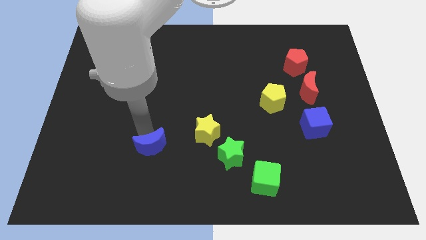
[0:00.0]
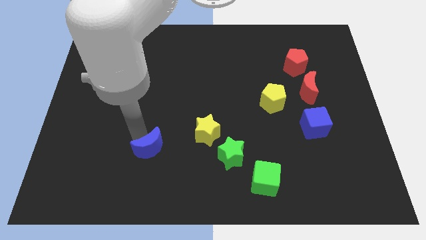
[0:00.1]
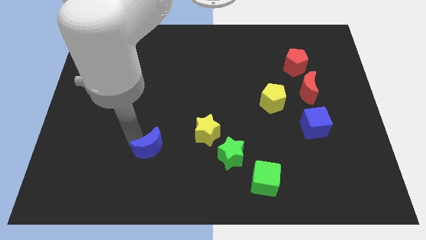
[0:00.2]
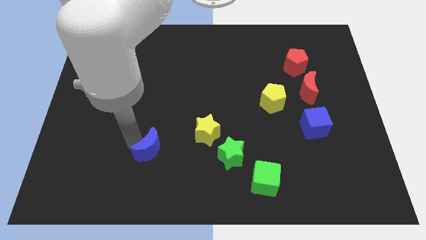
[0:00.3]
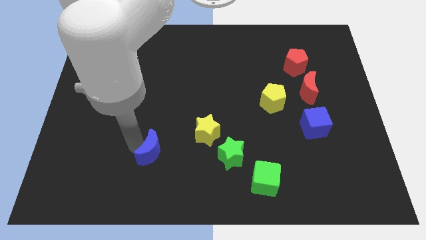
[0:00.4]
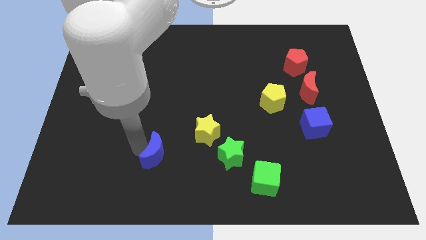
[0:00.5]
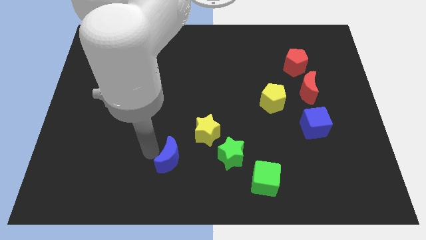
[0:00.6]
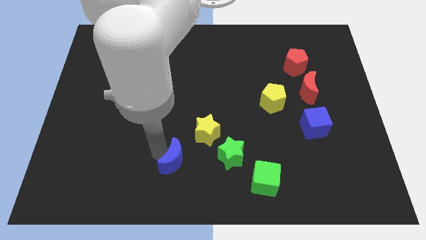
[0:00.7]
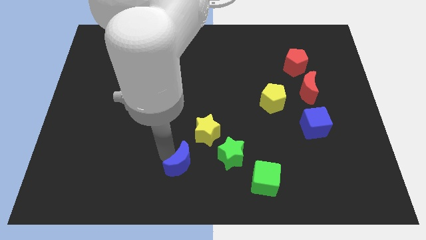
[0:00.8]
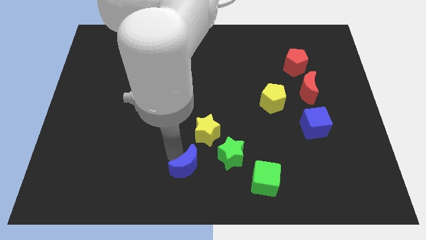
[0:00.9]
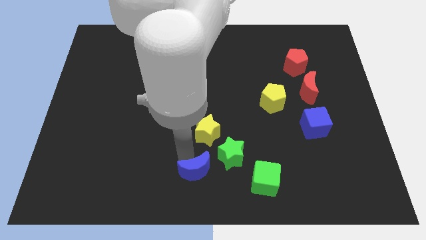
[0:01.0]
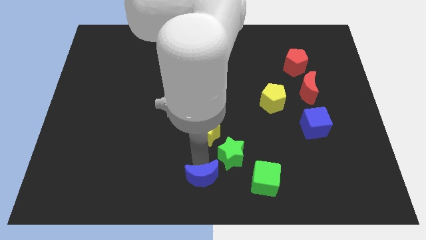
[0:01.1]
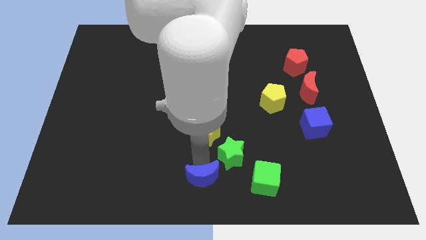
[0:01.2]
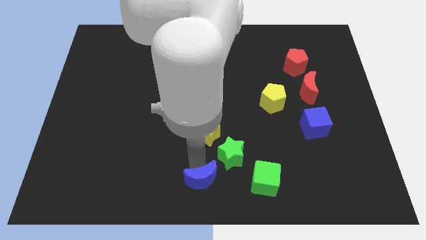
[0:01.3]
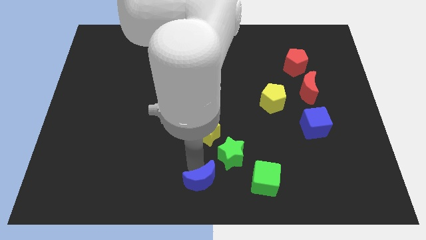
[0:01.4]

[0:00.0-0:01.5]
slide the blue moon below the yellow star

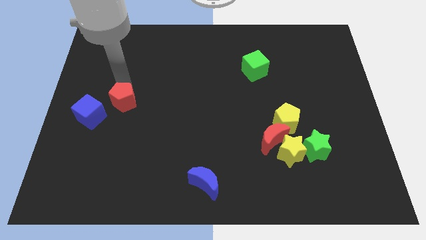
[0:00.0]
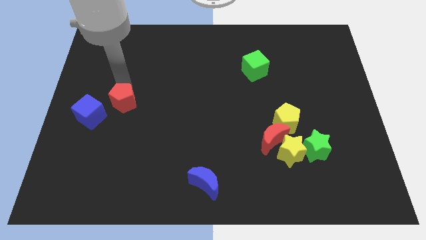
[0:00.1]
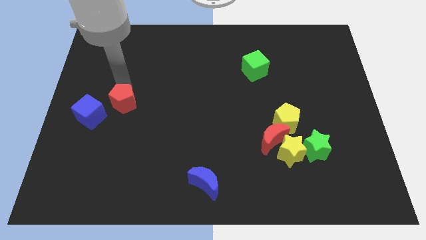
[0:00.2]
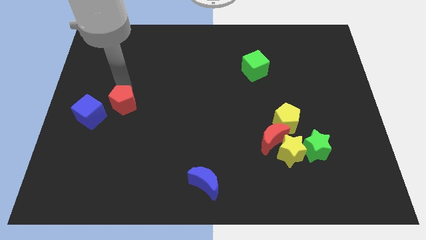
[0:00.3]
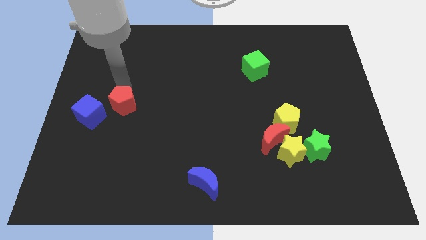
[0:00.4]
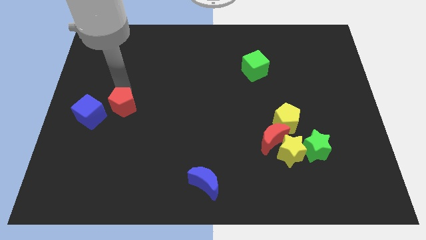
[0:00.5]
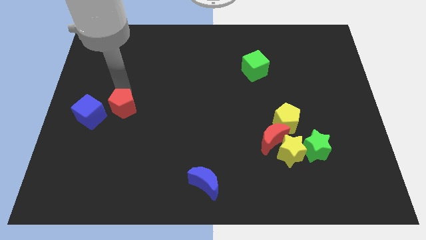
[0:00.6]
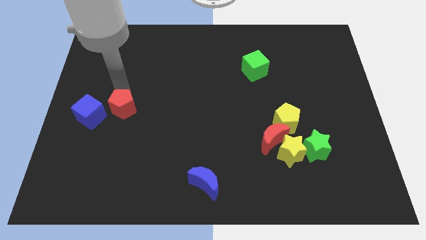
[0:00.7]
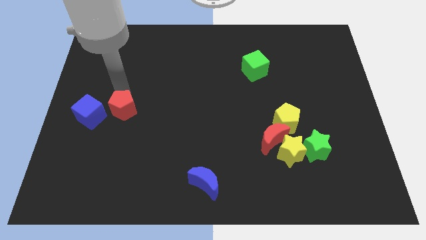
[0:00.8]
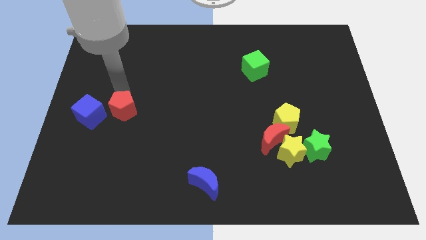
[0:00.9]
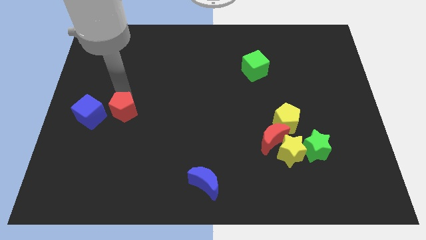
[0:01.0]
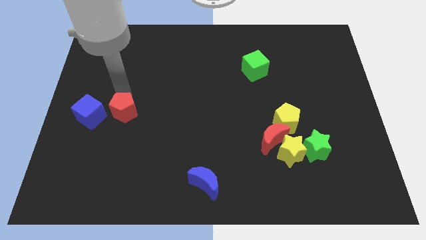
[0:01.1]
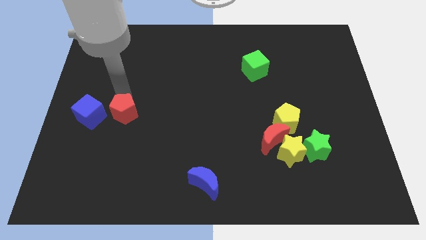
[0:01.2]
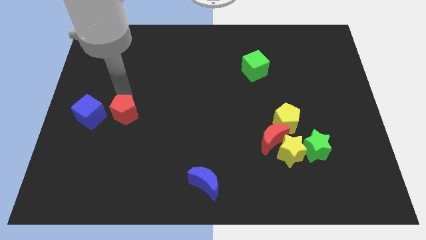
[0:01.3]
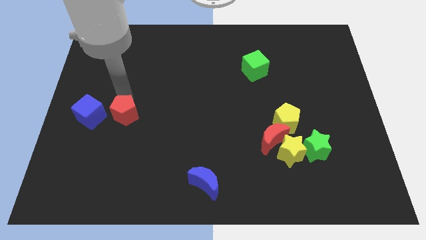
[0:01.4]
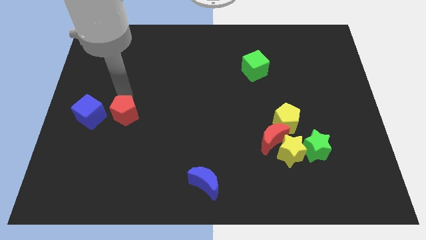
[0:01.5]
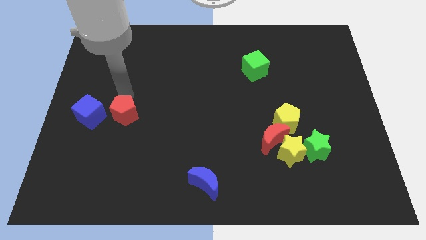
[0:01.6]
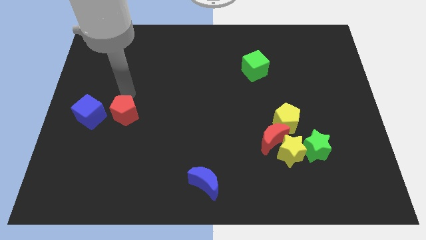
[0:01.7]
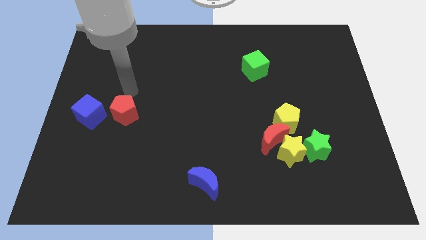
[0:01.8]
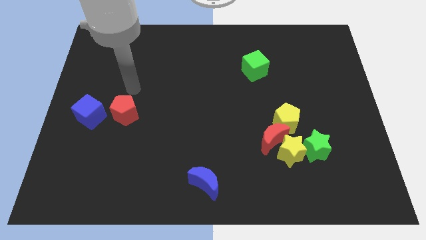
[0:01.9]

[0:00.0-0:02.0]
place the red pentagon to the right side of blue cube

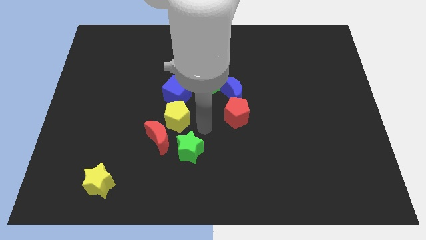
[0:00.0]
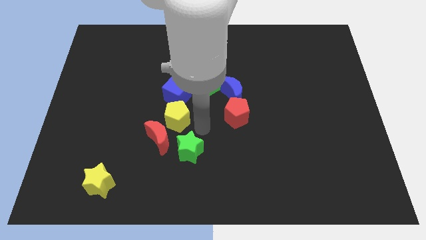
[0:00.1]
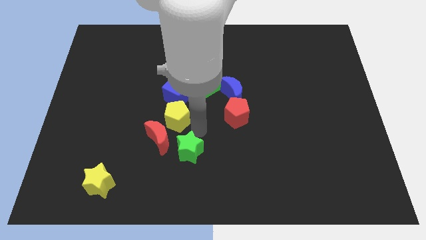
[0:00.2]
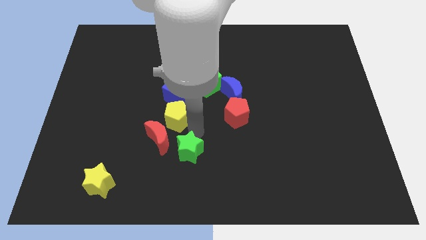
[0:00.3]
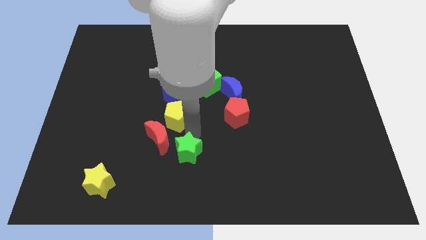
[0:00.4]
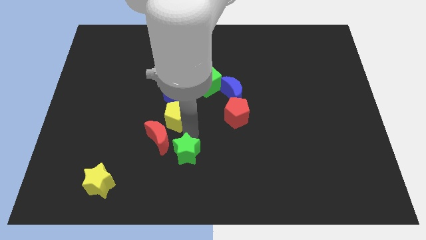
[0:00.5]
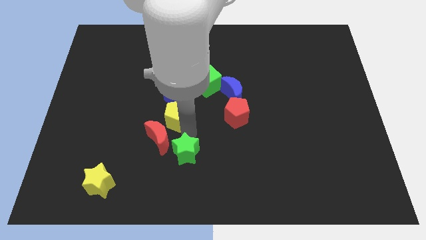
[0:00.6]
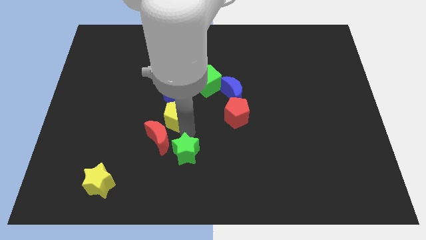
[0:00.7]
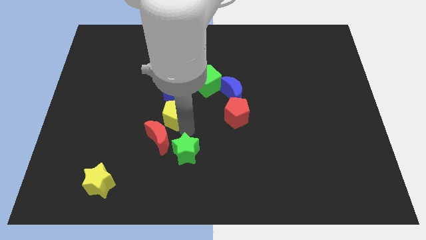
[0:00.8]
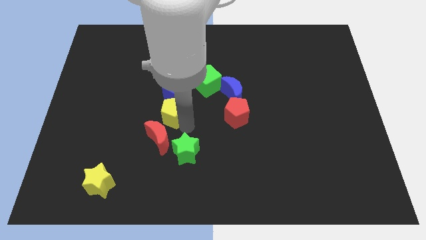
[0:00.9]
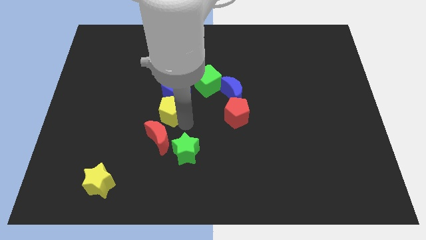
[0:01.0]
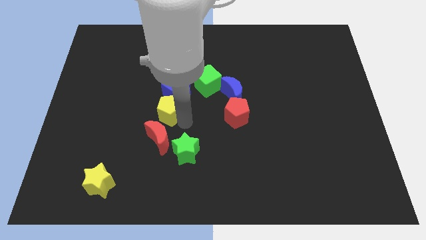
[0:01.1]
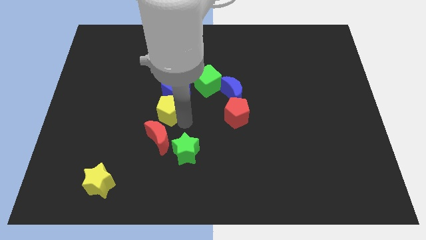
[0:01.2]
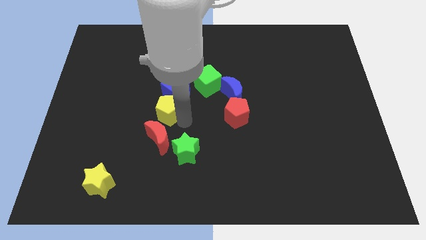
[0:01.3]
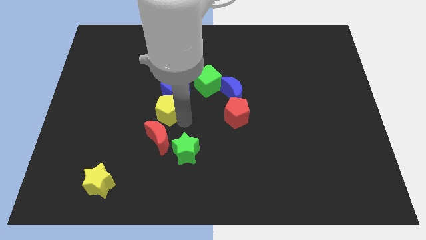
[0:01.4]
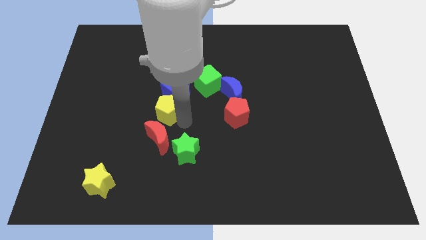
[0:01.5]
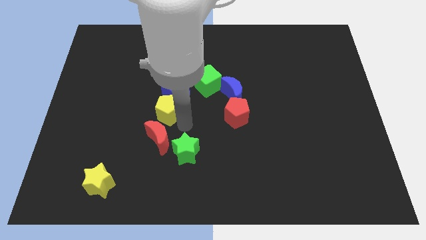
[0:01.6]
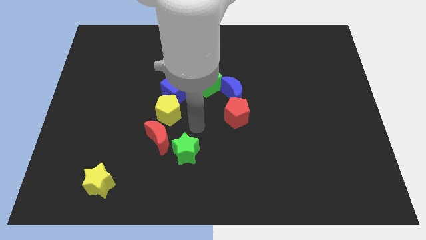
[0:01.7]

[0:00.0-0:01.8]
move the yellow pentagon into the bottom side of the blue cube

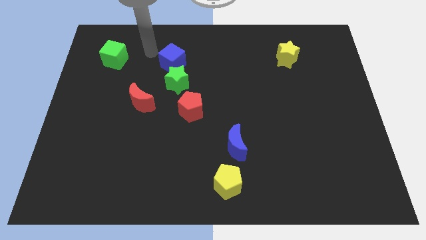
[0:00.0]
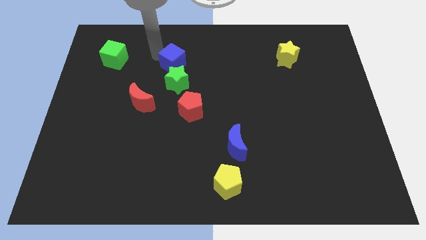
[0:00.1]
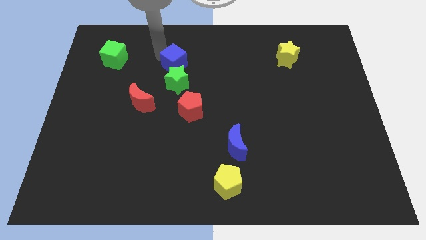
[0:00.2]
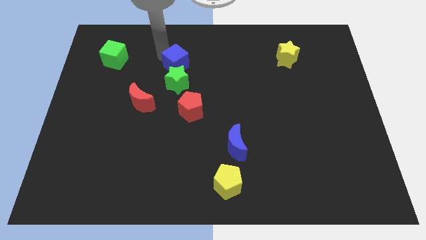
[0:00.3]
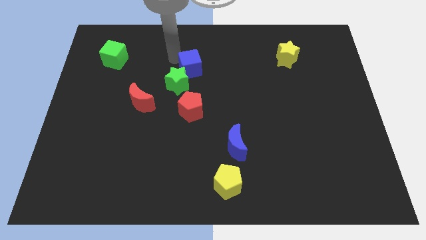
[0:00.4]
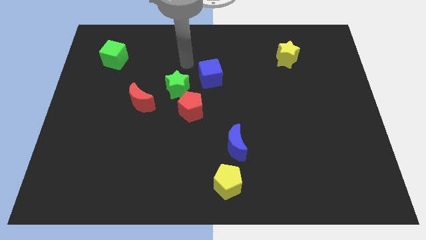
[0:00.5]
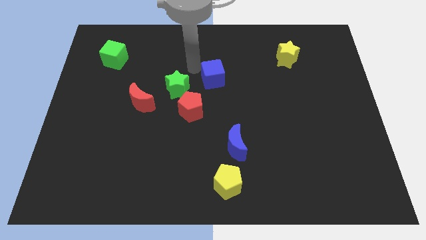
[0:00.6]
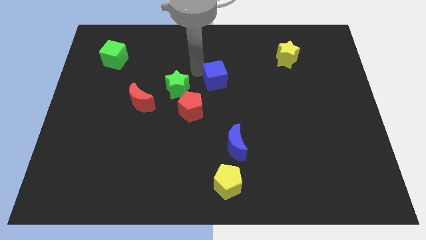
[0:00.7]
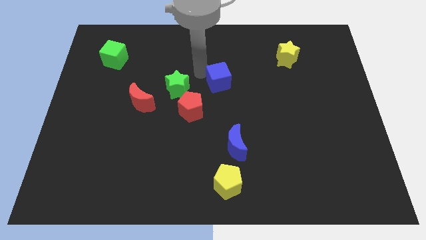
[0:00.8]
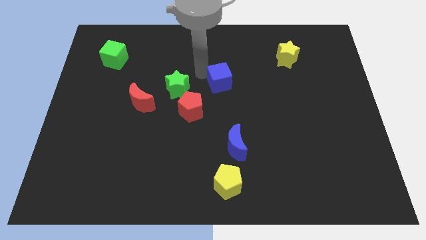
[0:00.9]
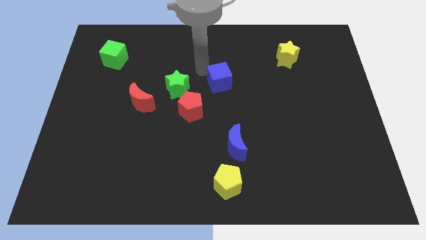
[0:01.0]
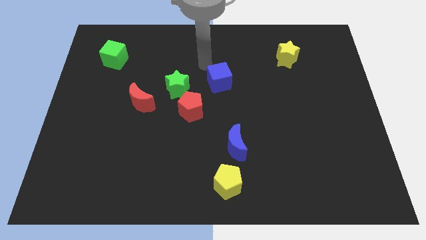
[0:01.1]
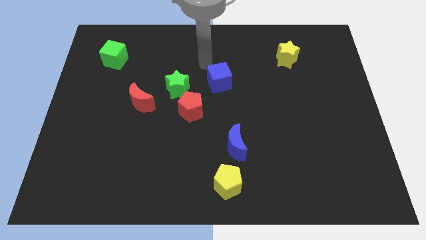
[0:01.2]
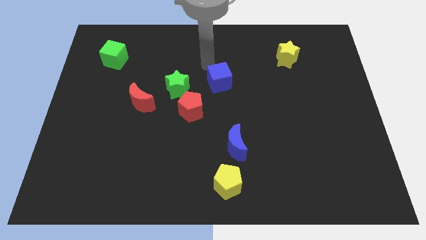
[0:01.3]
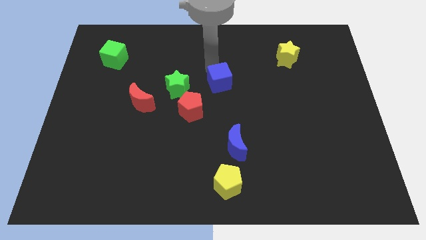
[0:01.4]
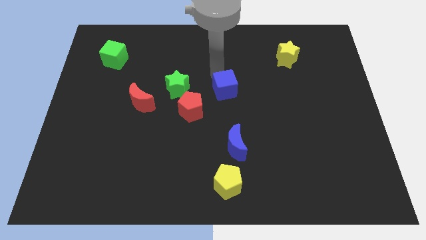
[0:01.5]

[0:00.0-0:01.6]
separate the blue cube from the green star

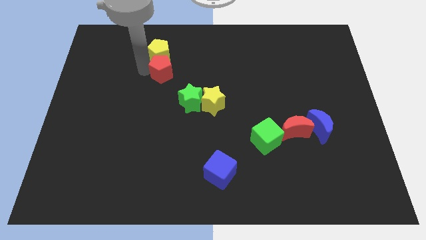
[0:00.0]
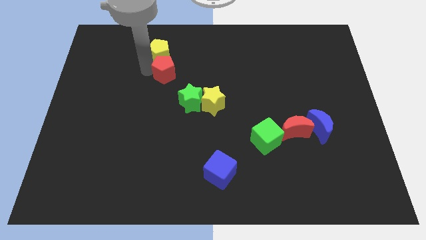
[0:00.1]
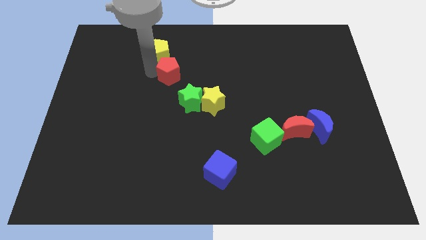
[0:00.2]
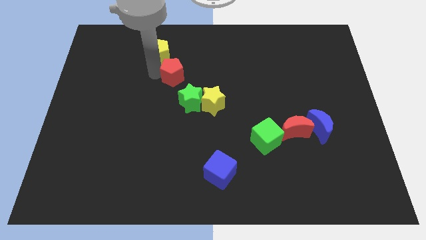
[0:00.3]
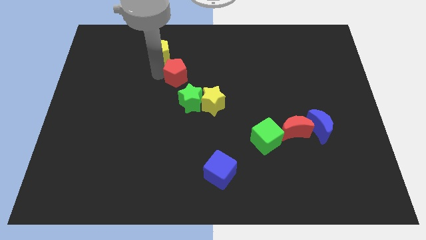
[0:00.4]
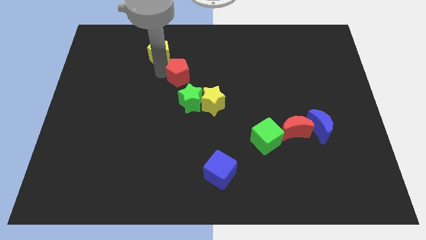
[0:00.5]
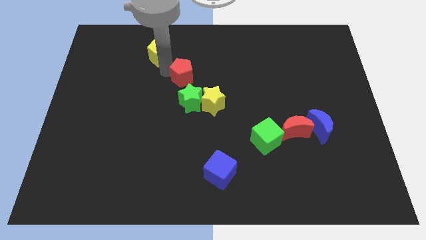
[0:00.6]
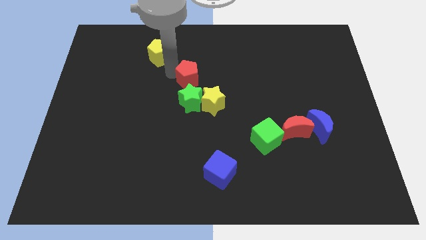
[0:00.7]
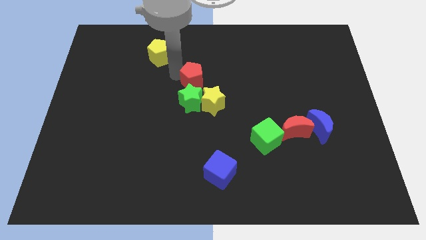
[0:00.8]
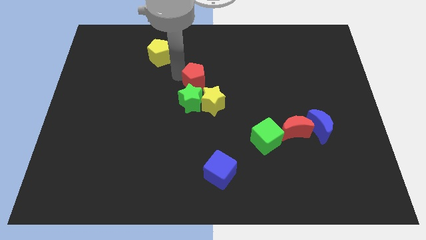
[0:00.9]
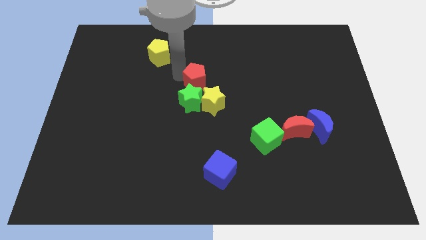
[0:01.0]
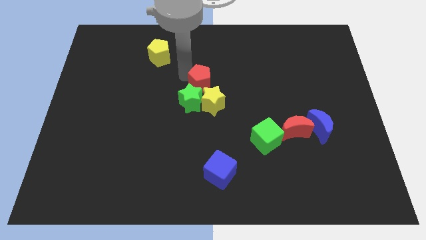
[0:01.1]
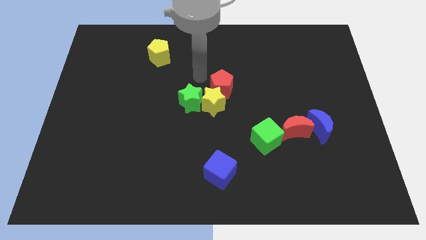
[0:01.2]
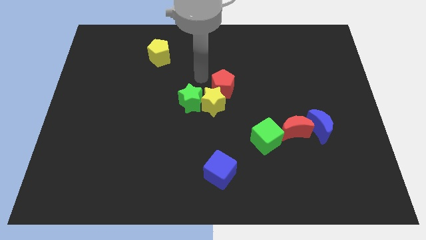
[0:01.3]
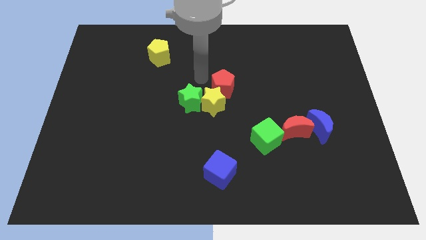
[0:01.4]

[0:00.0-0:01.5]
place the red pentagon above the yellow star

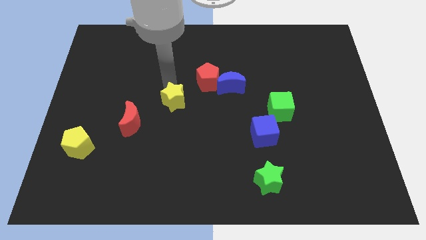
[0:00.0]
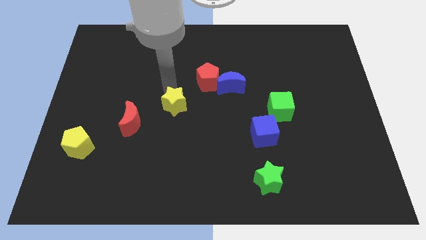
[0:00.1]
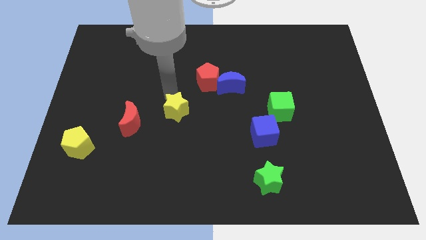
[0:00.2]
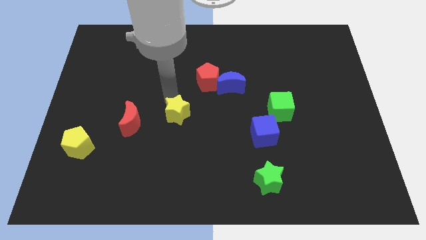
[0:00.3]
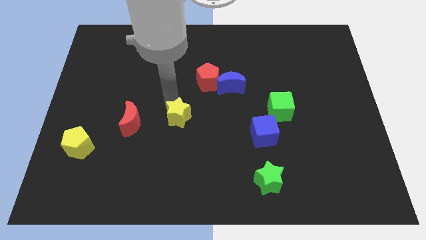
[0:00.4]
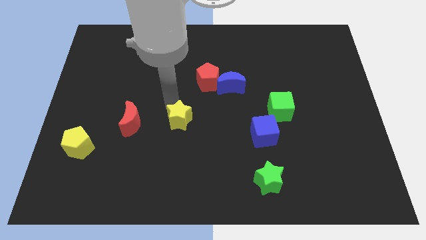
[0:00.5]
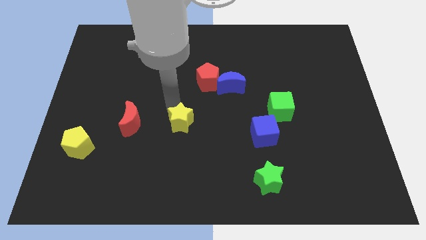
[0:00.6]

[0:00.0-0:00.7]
place the yellow star to the right of the red moon
